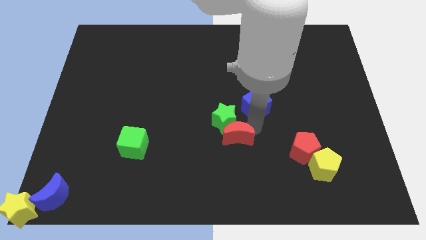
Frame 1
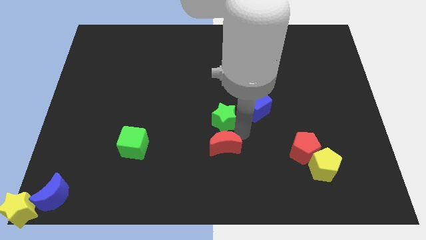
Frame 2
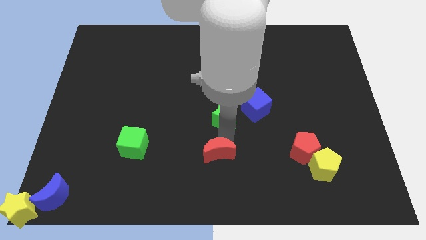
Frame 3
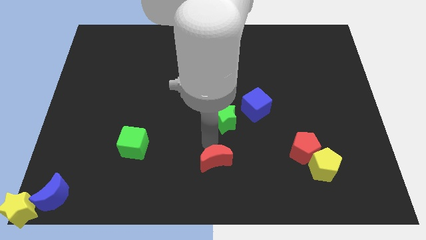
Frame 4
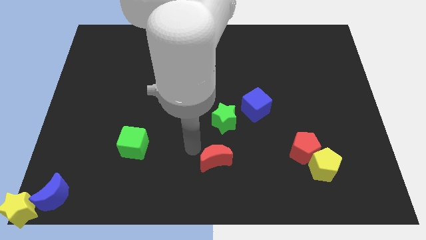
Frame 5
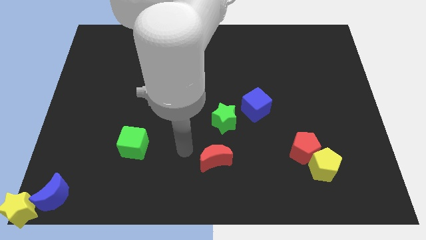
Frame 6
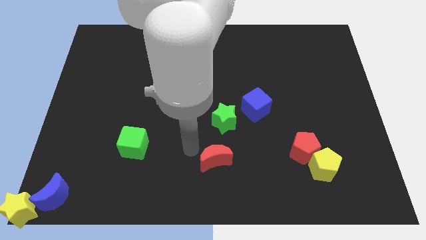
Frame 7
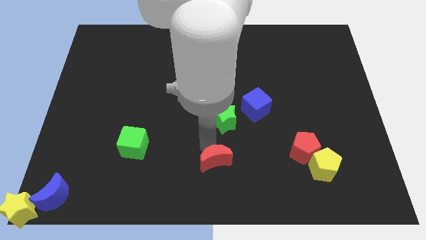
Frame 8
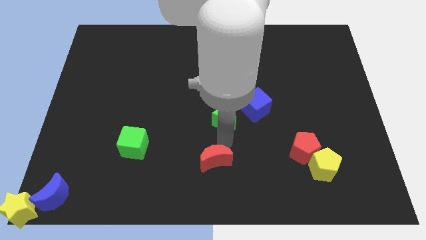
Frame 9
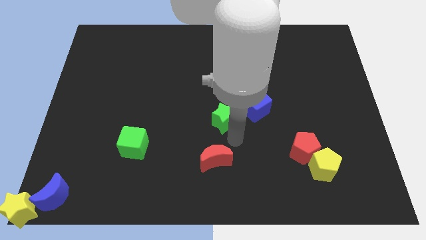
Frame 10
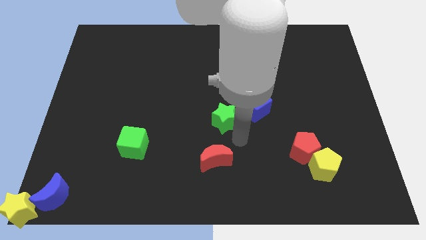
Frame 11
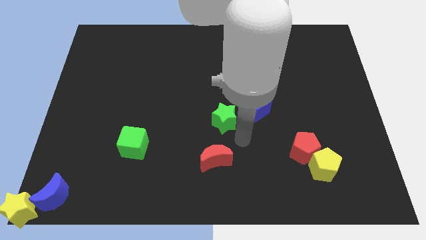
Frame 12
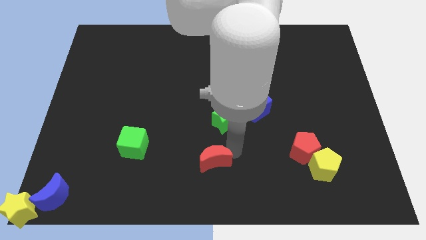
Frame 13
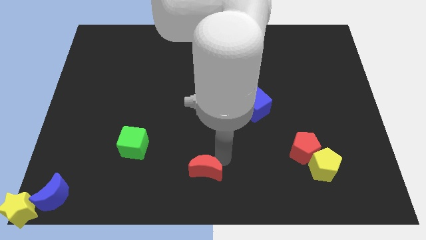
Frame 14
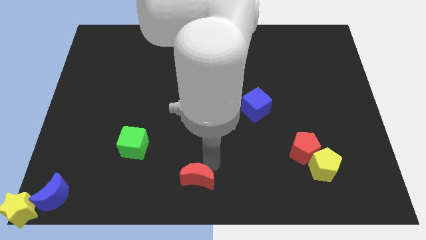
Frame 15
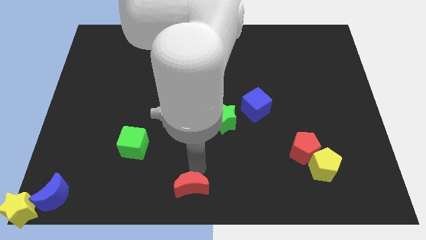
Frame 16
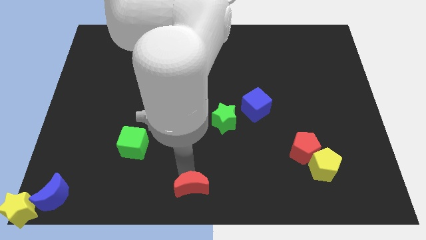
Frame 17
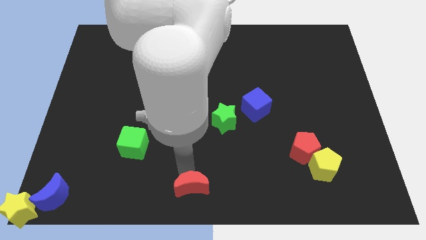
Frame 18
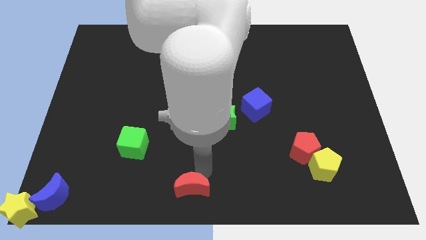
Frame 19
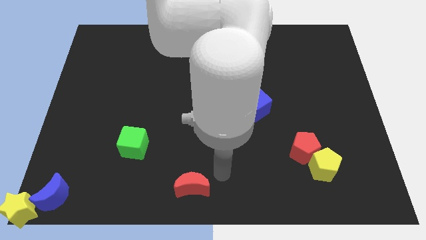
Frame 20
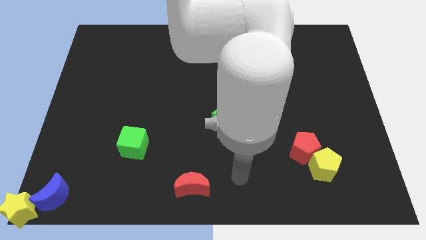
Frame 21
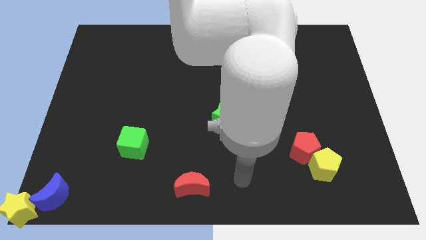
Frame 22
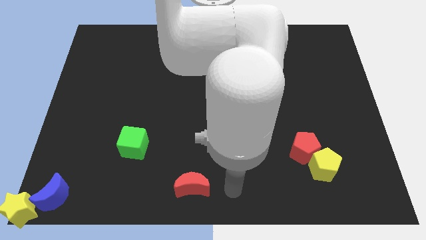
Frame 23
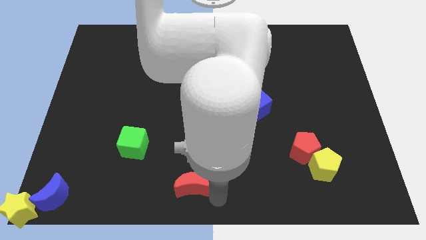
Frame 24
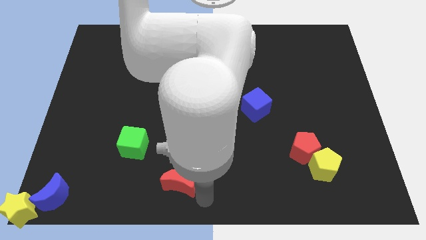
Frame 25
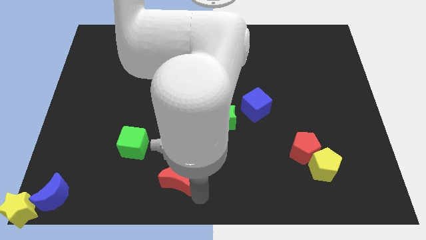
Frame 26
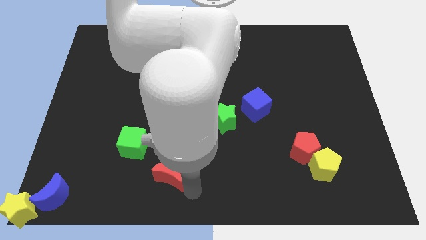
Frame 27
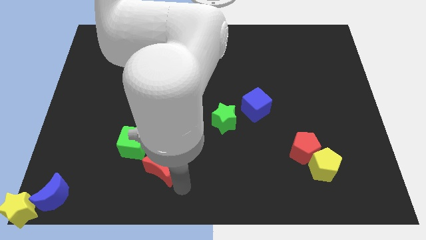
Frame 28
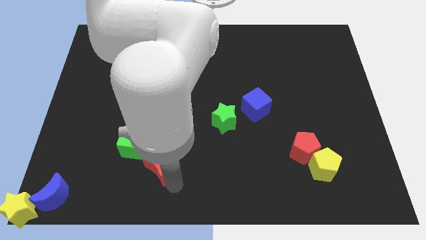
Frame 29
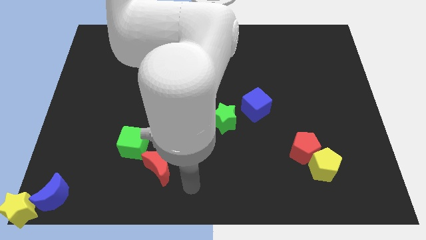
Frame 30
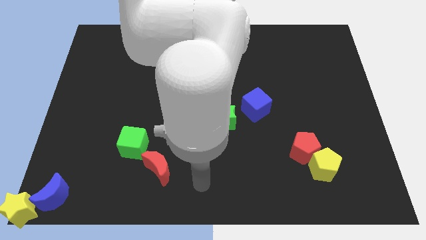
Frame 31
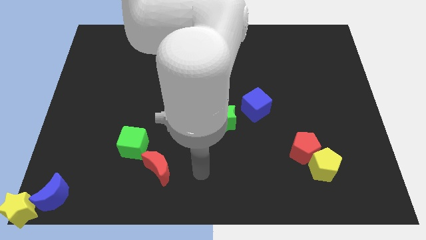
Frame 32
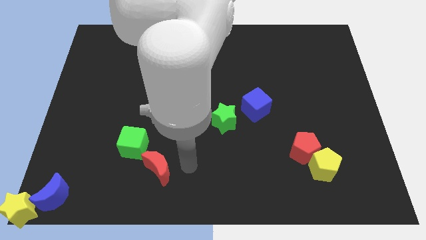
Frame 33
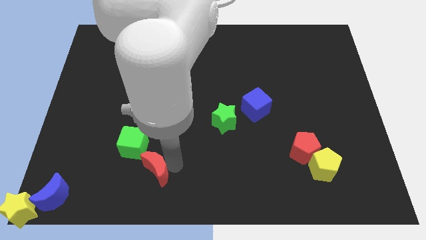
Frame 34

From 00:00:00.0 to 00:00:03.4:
slide the red crescent to the bottom right side of the green cube

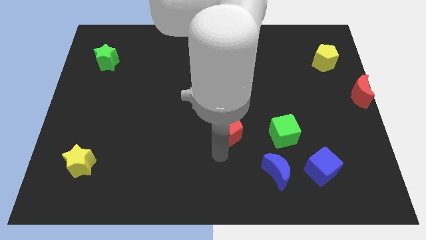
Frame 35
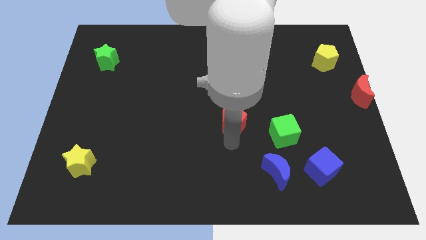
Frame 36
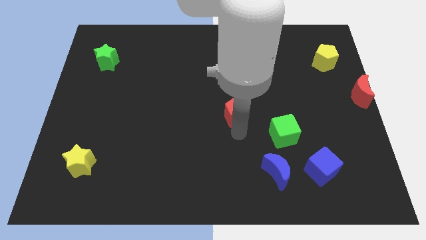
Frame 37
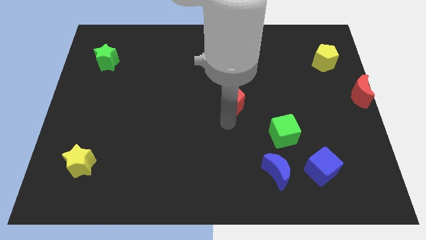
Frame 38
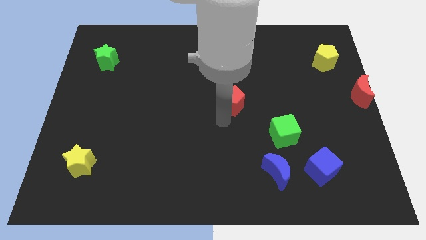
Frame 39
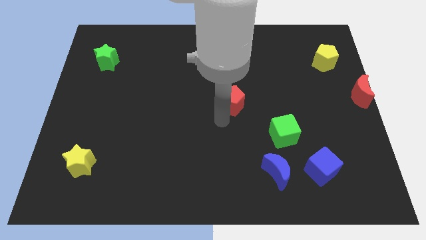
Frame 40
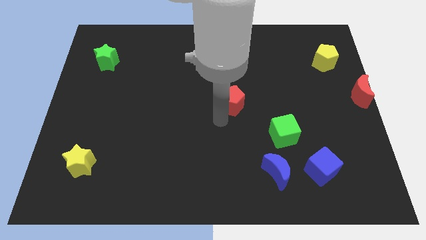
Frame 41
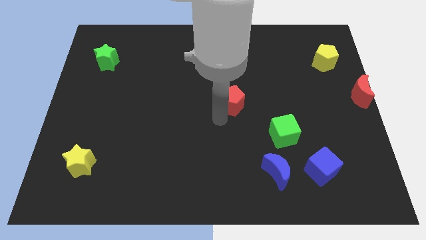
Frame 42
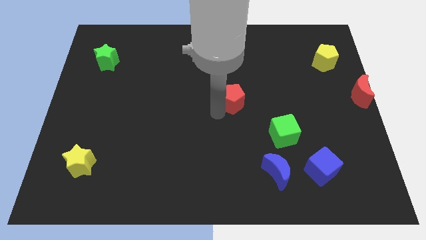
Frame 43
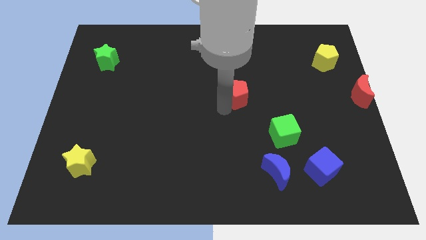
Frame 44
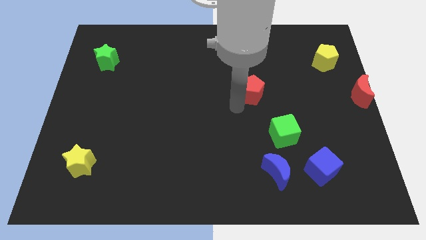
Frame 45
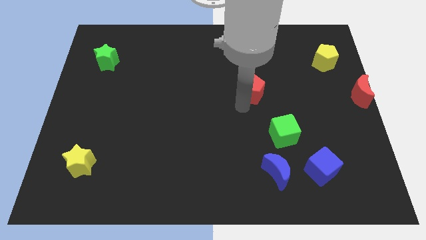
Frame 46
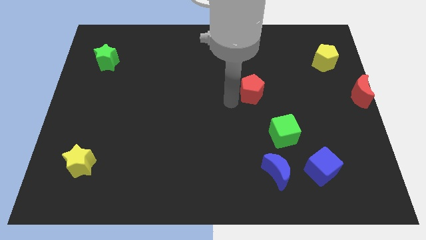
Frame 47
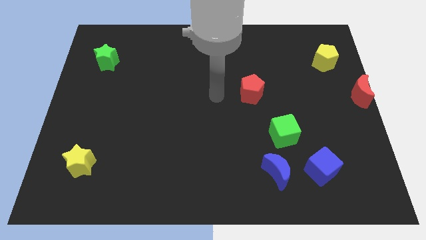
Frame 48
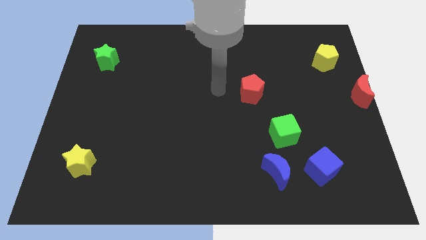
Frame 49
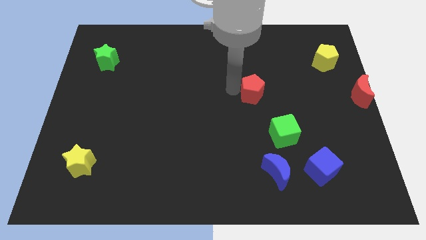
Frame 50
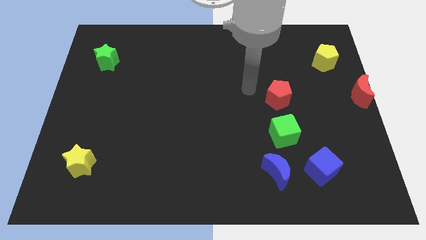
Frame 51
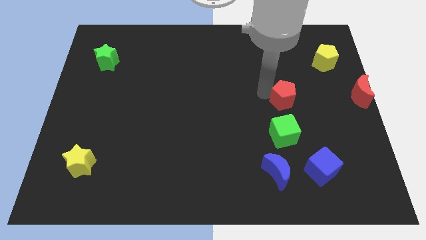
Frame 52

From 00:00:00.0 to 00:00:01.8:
put the red pentagon above the green cube

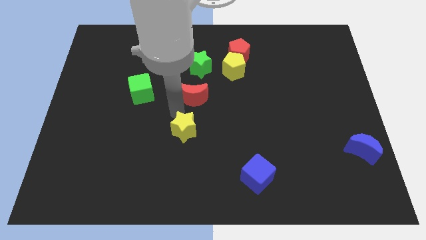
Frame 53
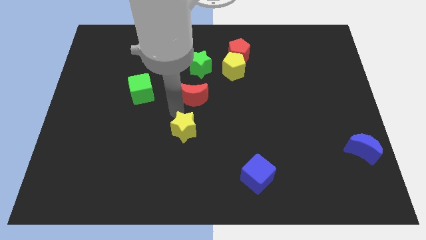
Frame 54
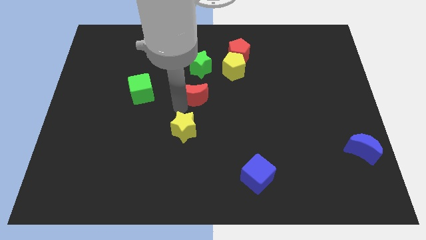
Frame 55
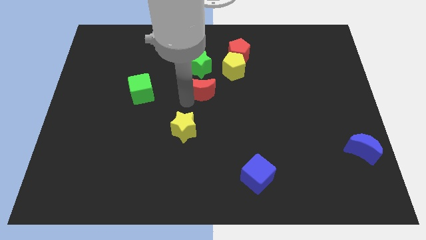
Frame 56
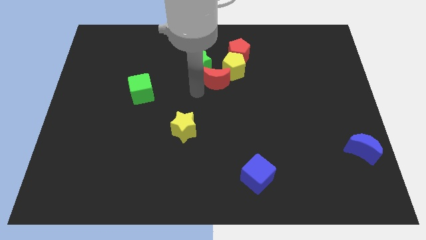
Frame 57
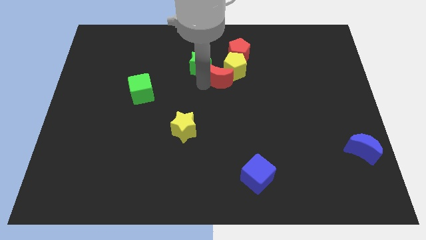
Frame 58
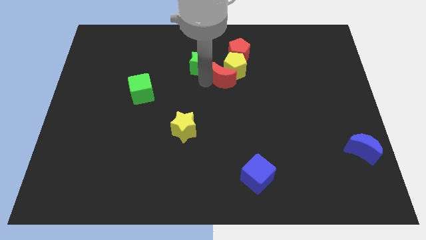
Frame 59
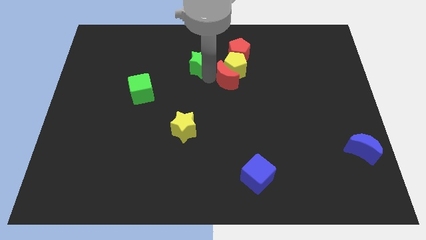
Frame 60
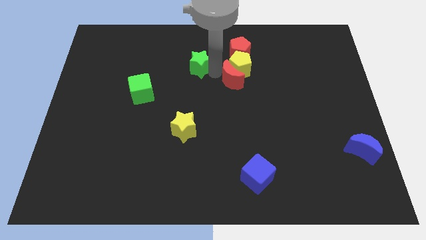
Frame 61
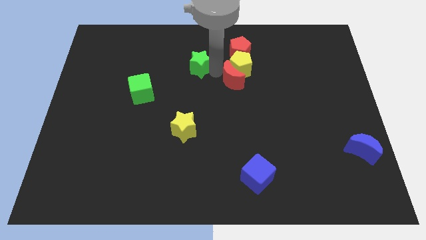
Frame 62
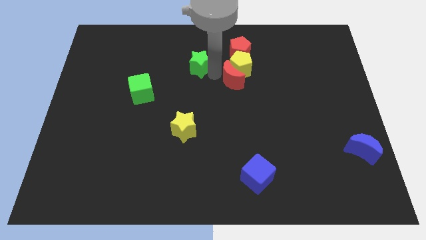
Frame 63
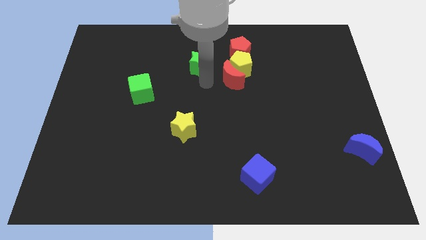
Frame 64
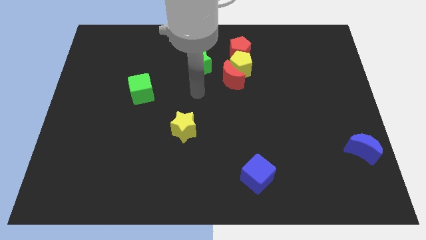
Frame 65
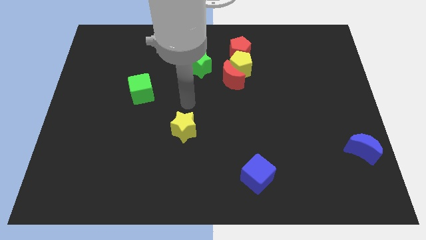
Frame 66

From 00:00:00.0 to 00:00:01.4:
move the red crescent into the yellow pentagon

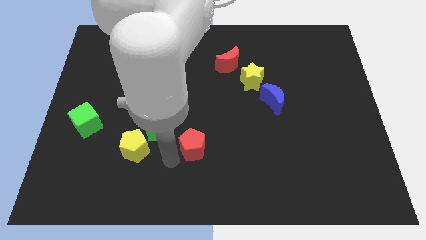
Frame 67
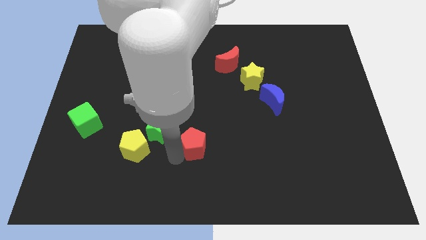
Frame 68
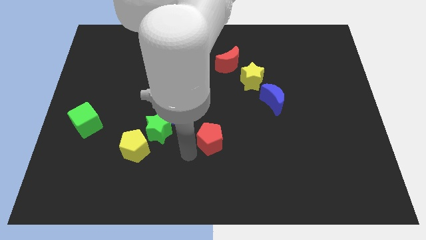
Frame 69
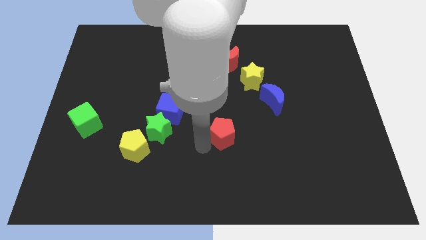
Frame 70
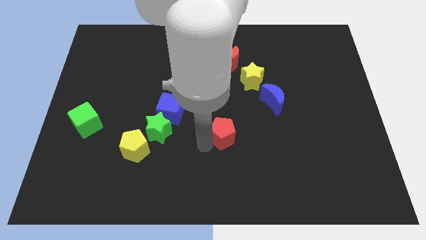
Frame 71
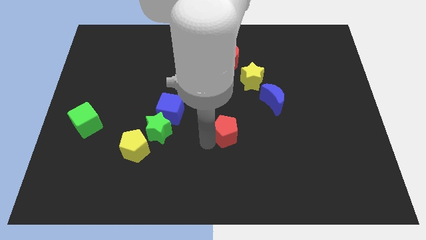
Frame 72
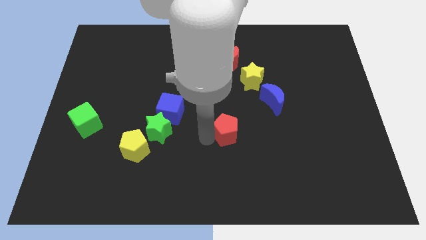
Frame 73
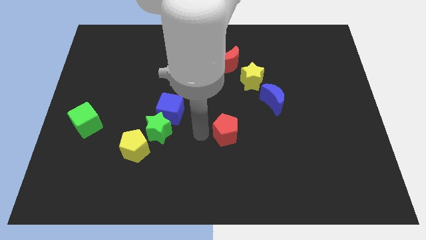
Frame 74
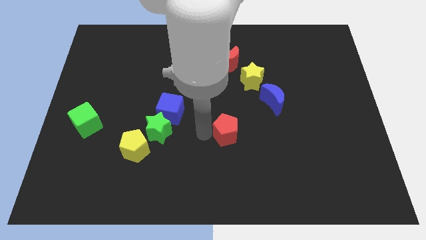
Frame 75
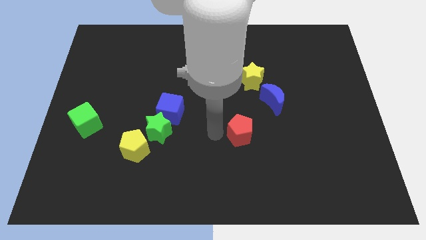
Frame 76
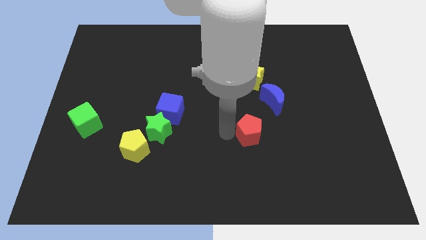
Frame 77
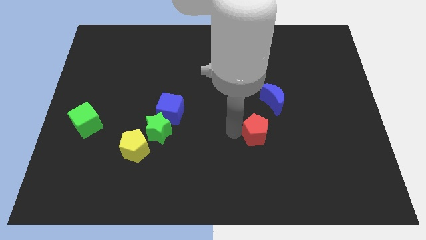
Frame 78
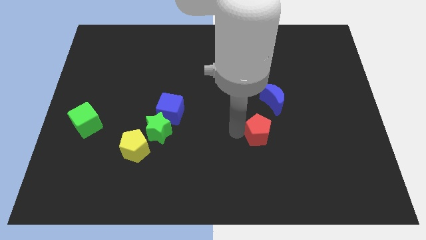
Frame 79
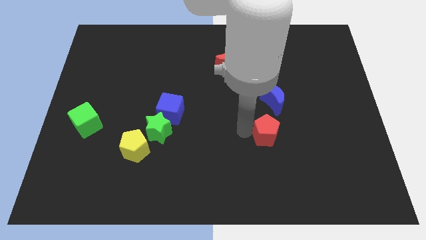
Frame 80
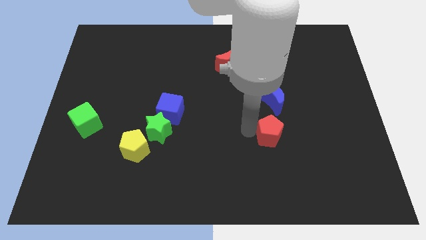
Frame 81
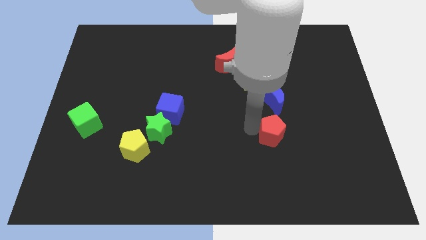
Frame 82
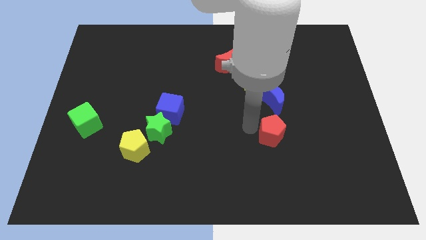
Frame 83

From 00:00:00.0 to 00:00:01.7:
place the red pentagon under the blue crescent

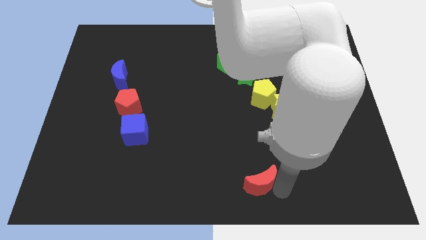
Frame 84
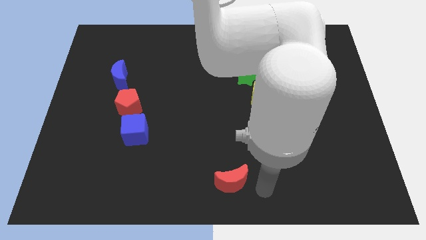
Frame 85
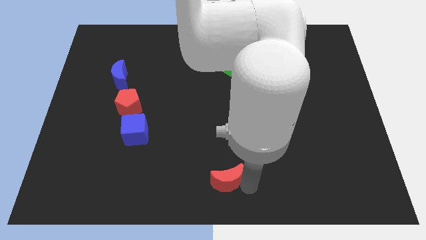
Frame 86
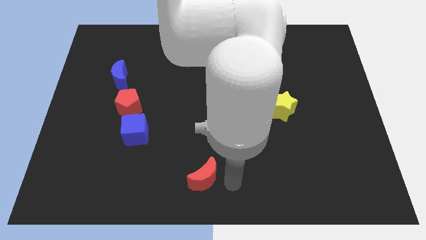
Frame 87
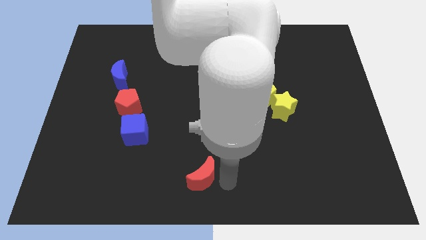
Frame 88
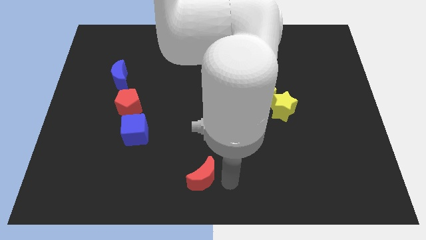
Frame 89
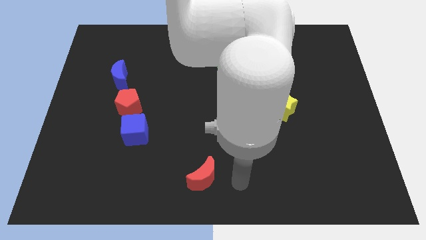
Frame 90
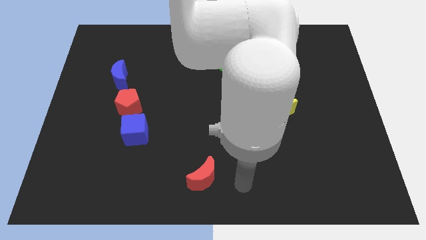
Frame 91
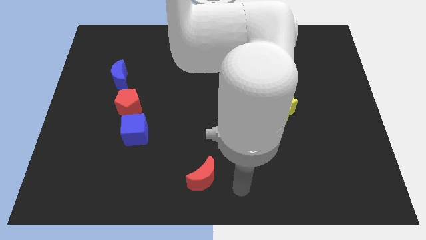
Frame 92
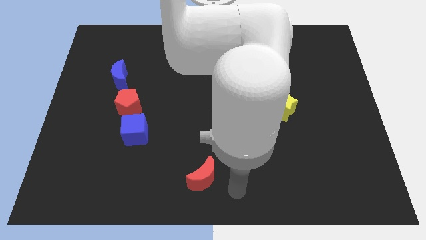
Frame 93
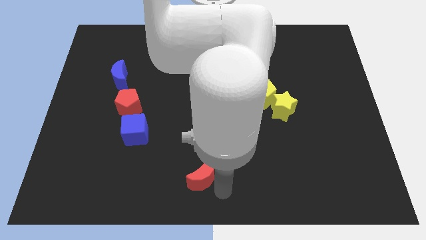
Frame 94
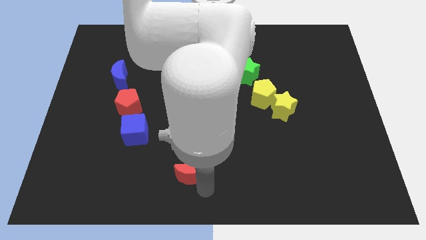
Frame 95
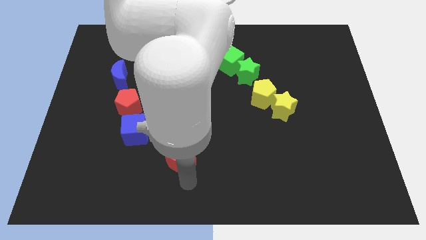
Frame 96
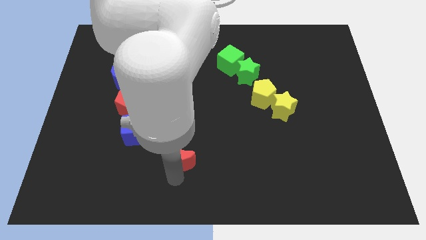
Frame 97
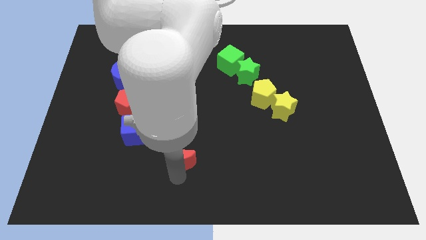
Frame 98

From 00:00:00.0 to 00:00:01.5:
drag the red crescent towards the blue cube
